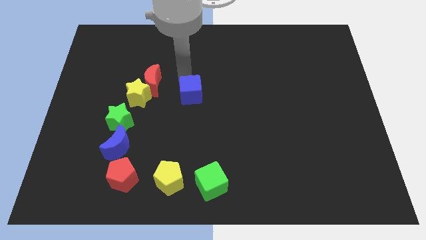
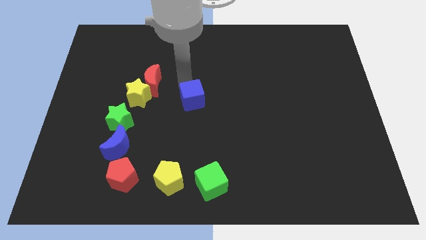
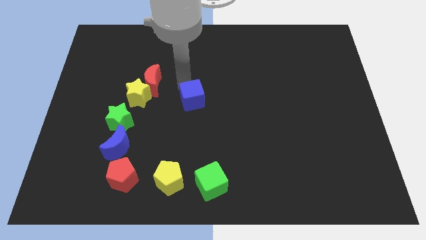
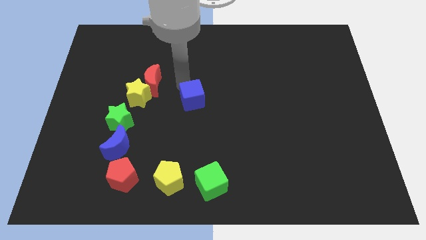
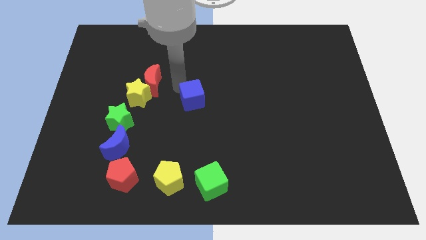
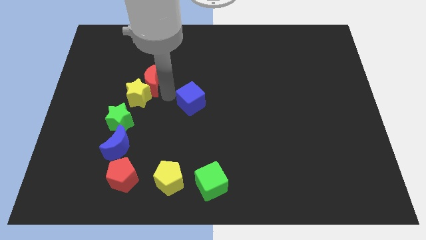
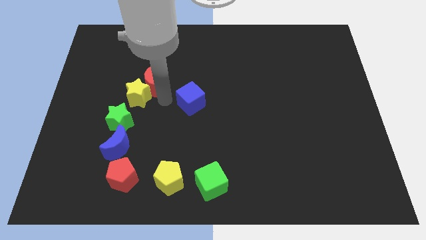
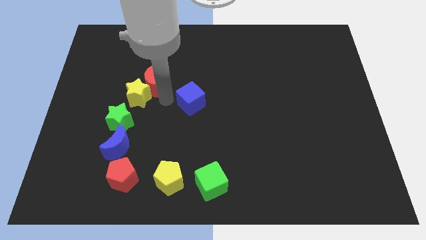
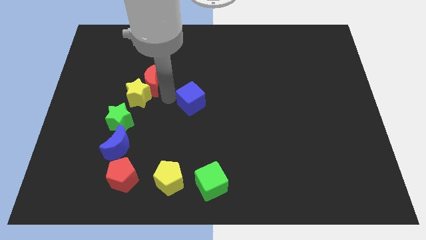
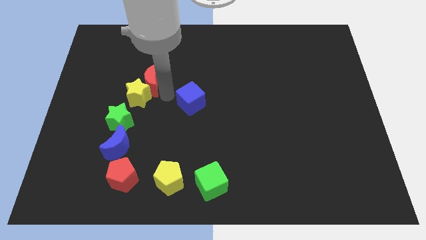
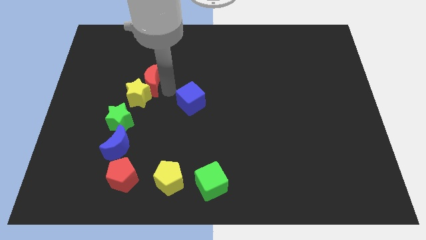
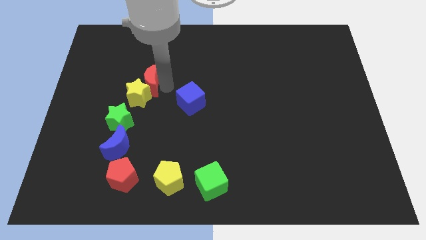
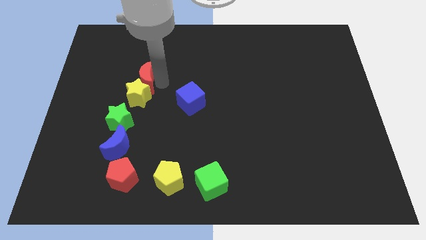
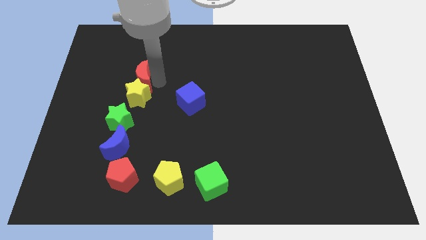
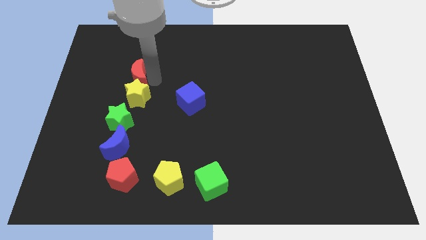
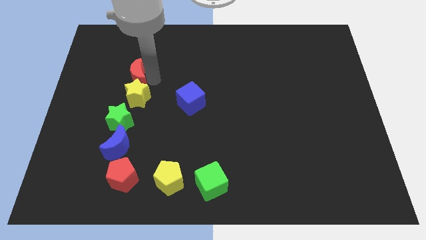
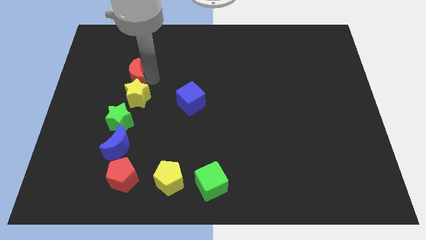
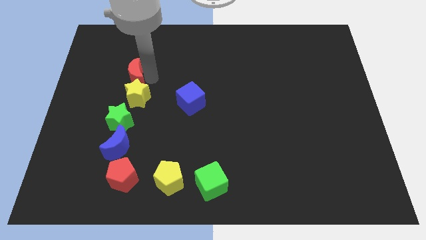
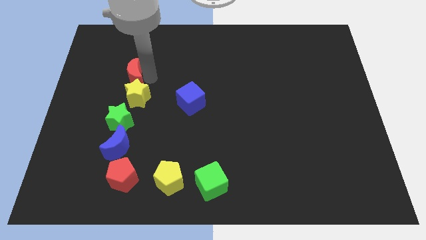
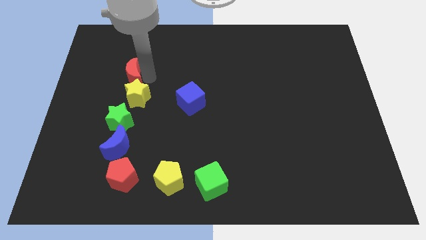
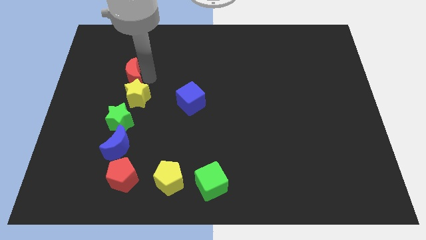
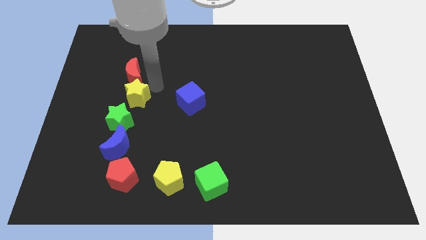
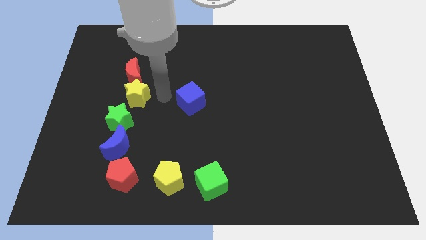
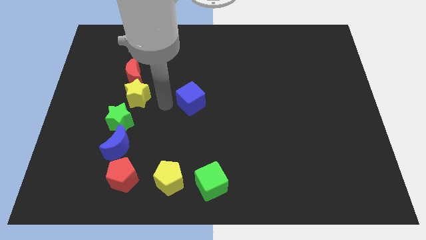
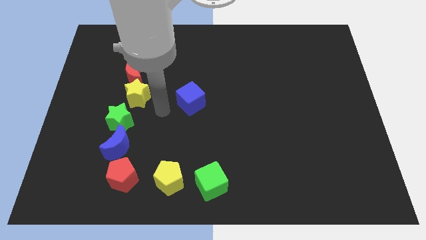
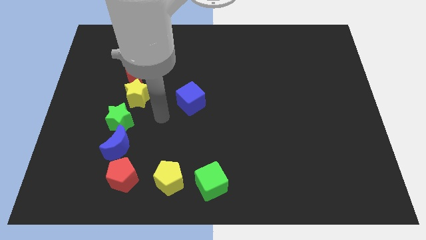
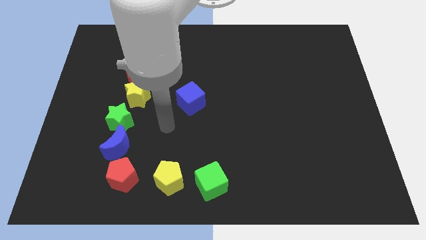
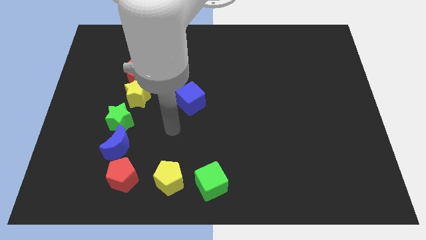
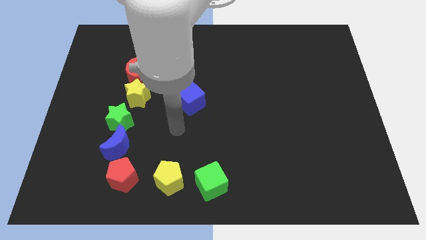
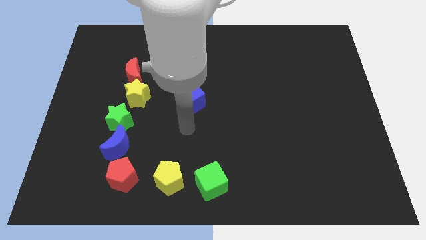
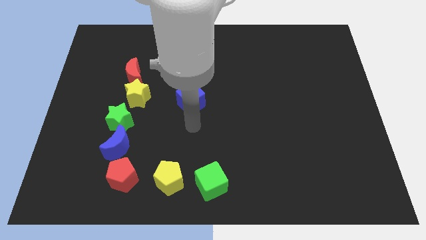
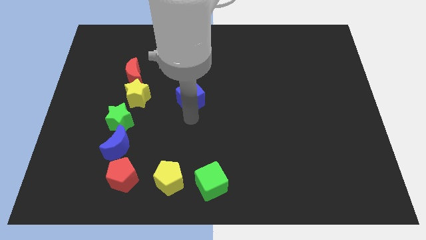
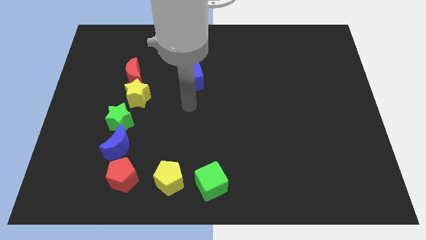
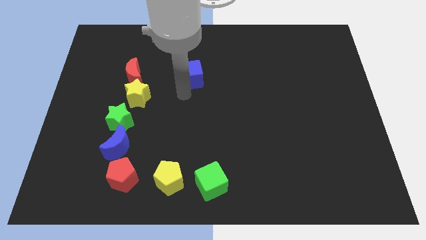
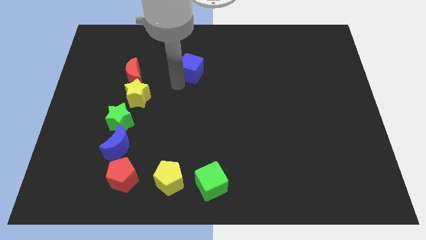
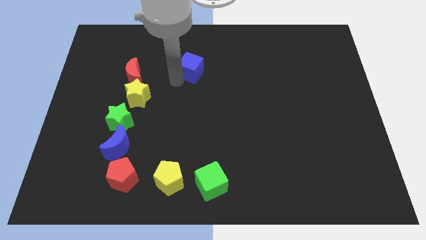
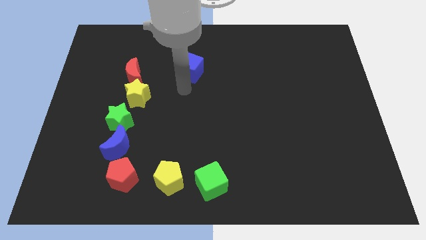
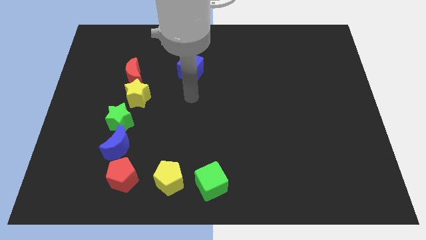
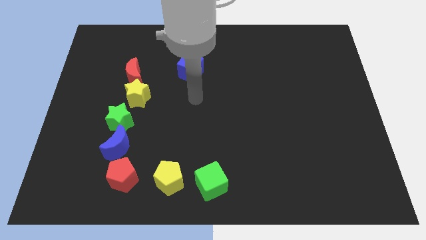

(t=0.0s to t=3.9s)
tap the blue moon

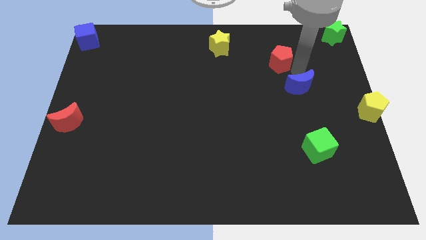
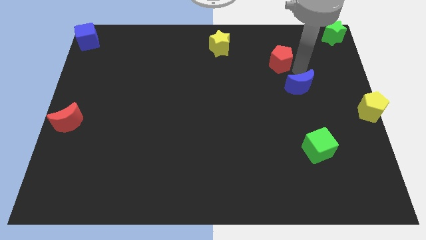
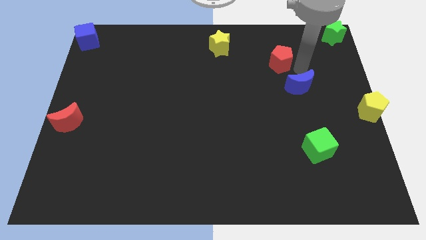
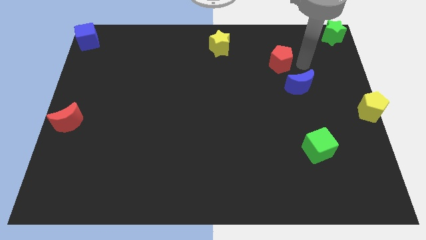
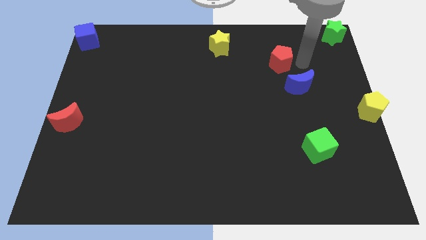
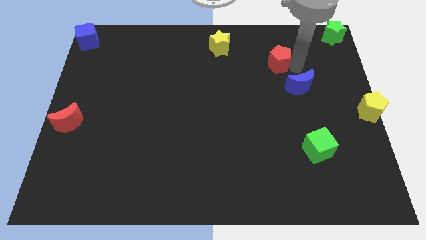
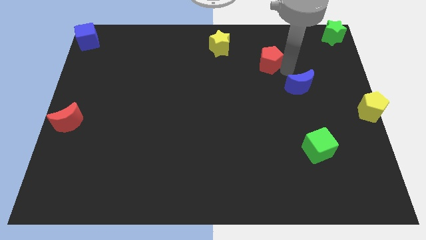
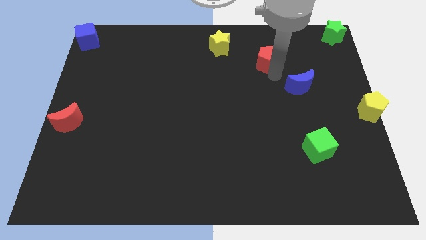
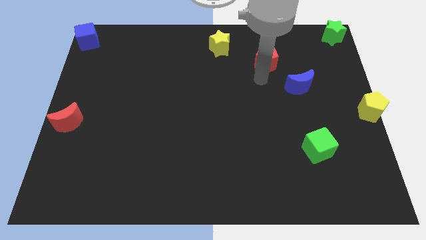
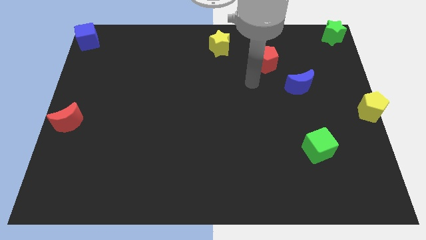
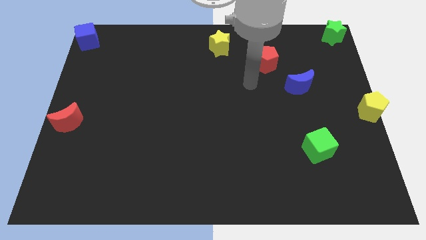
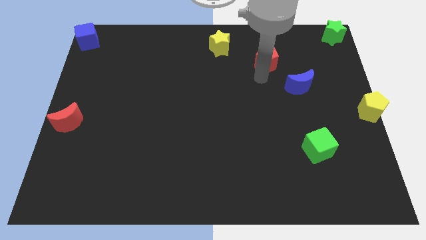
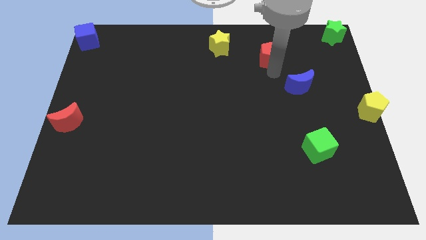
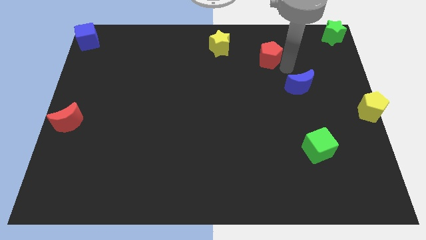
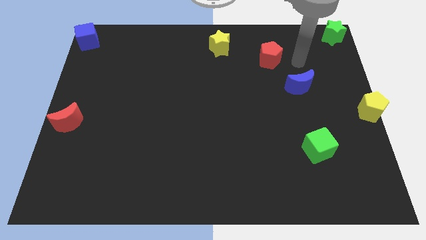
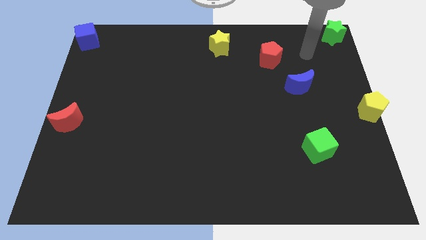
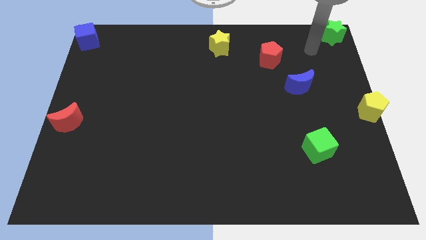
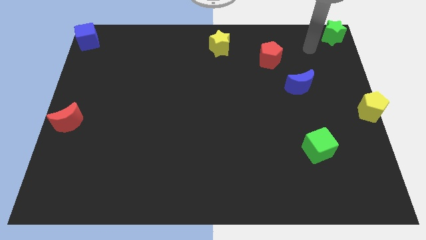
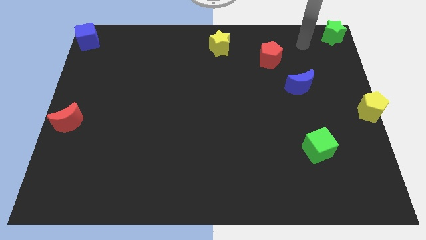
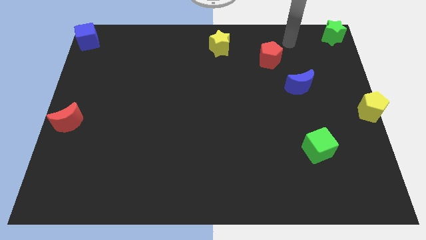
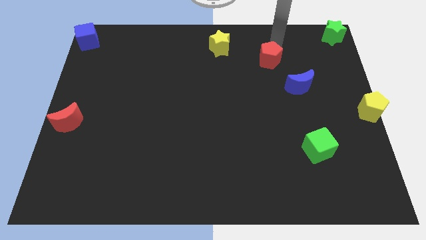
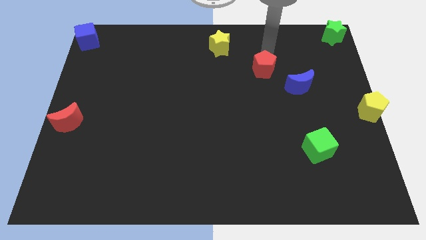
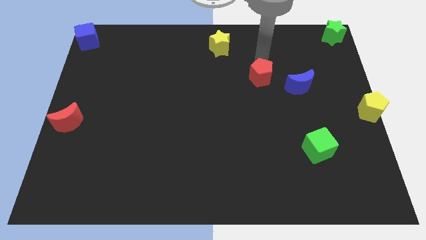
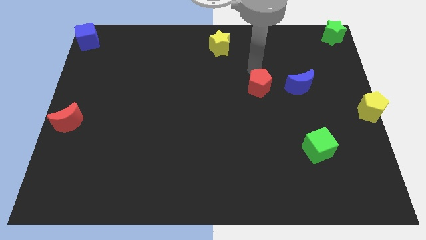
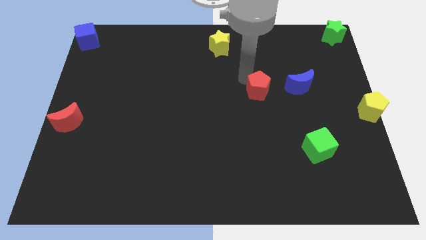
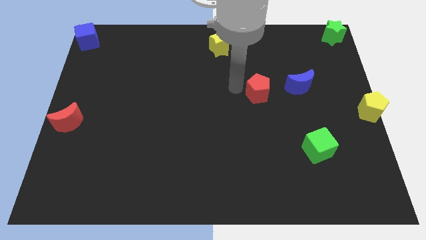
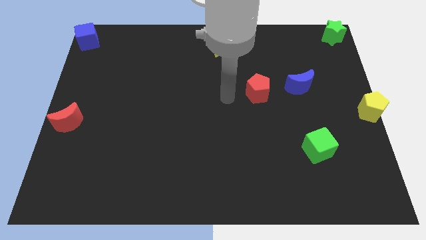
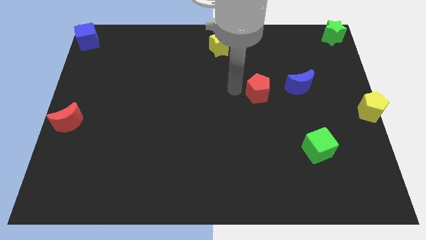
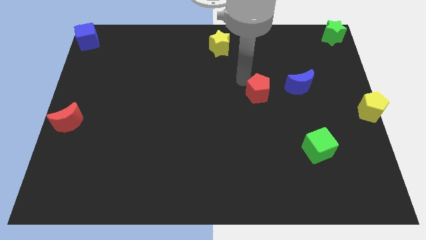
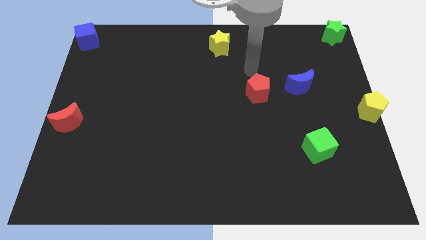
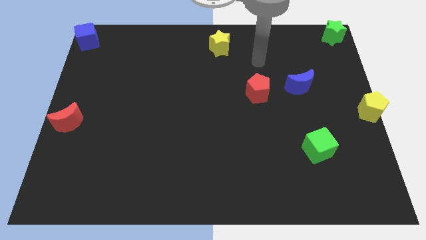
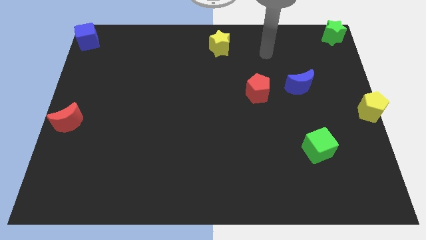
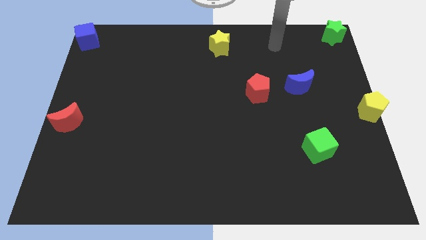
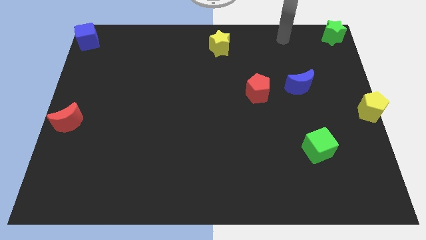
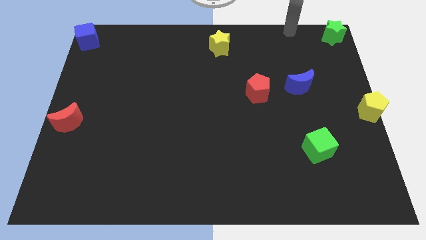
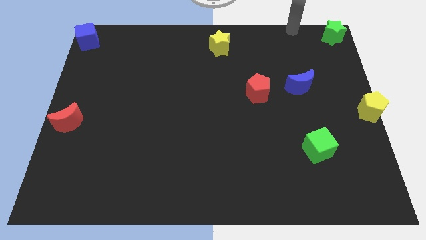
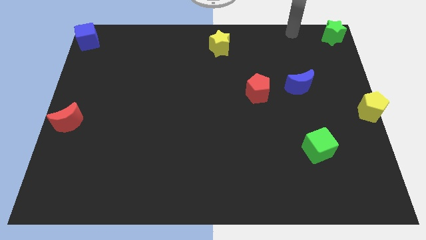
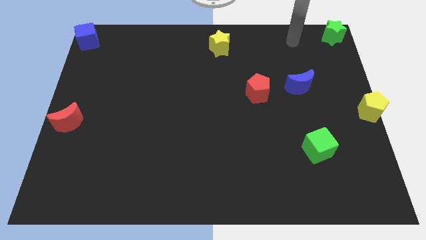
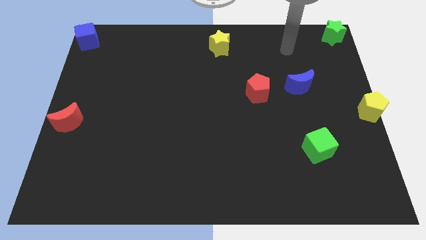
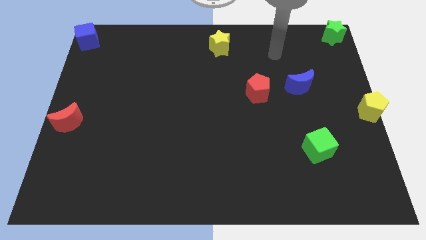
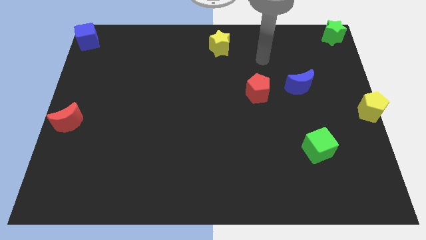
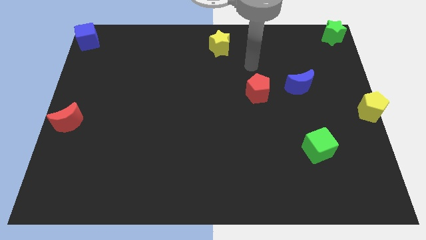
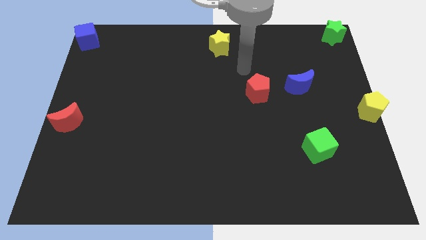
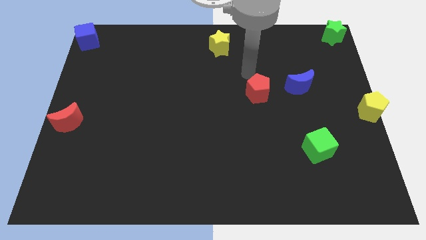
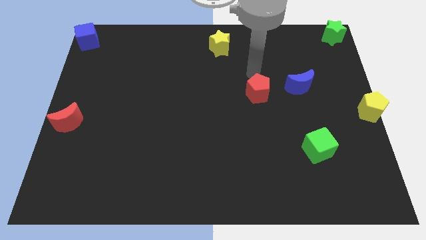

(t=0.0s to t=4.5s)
move the red pentagon to the left of the blue moon

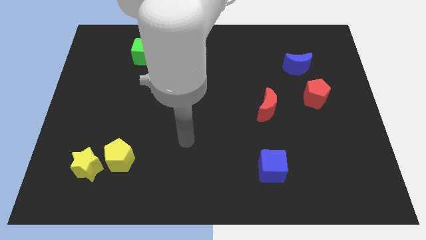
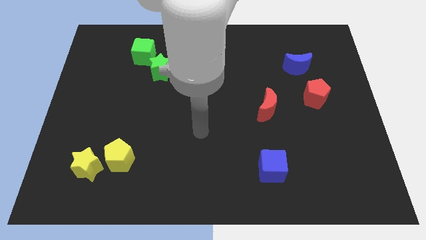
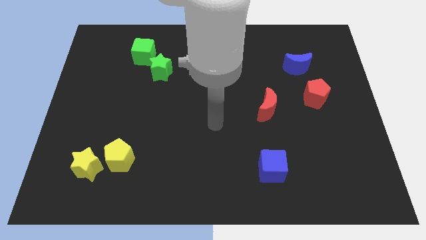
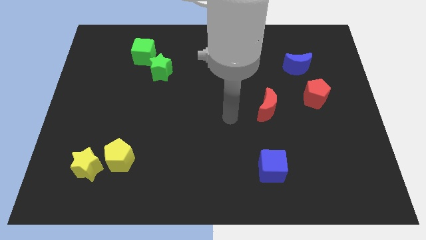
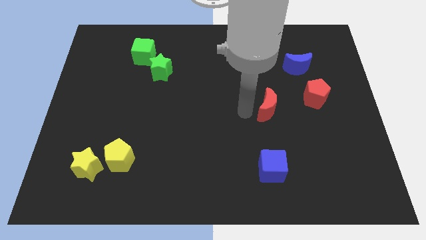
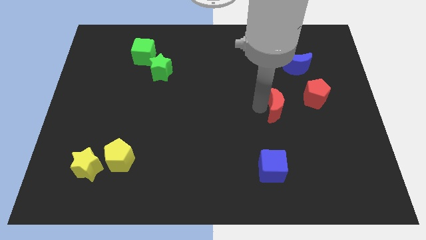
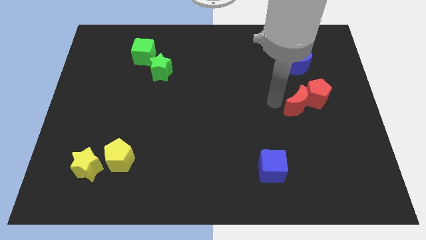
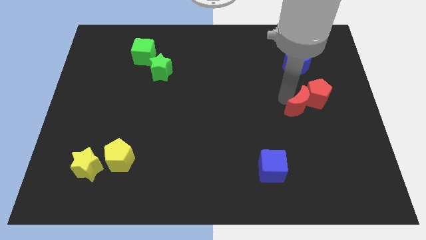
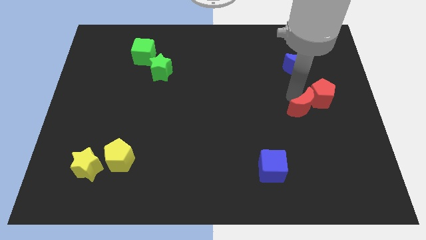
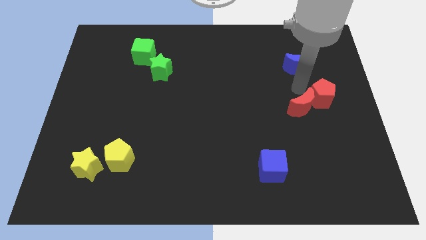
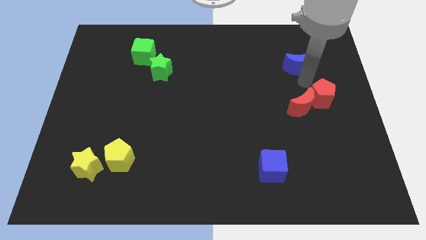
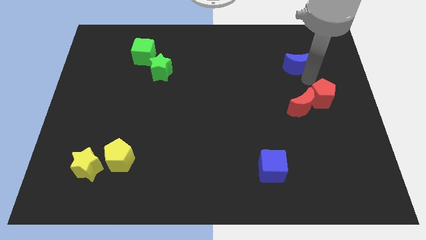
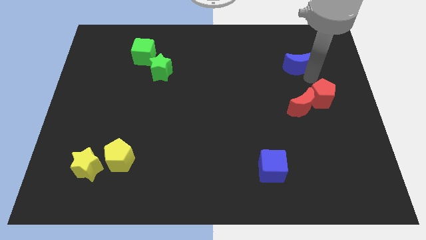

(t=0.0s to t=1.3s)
push the red crescent into the red pentagon
